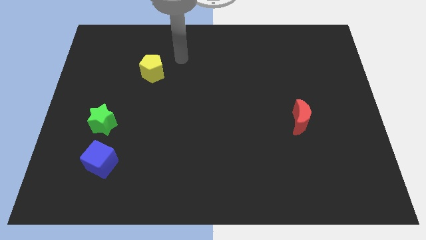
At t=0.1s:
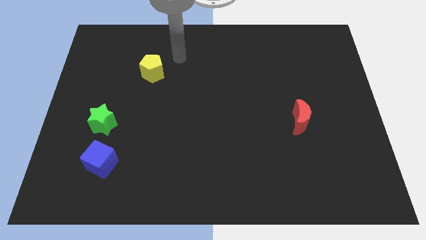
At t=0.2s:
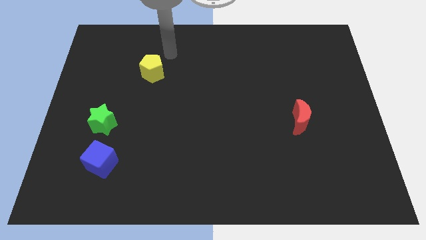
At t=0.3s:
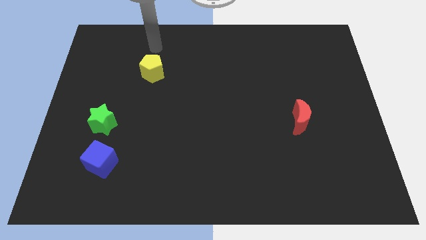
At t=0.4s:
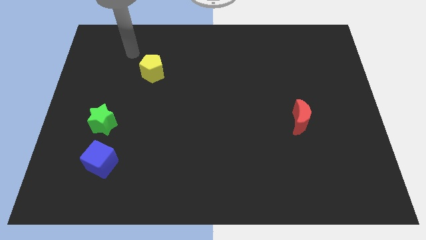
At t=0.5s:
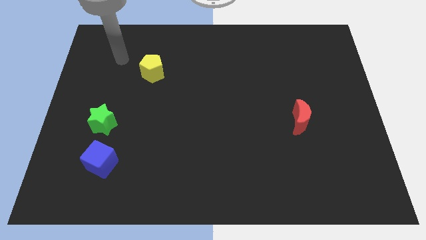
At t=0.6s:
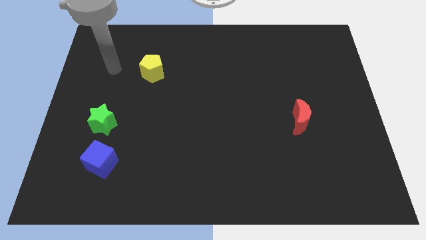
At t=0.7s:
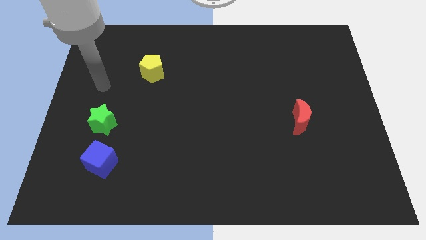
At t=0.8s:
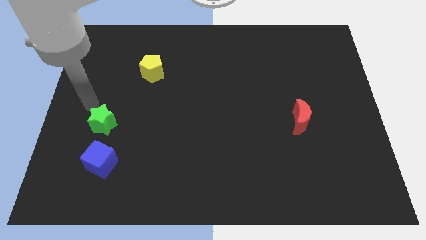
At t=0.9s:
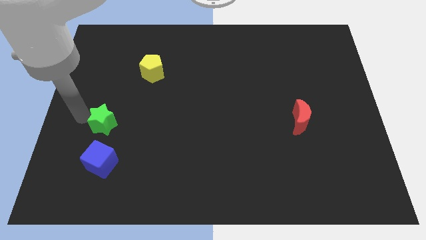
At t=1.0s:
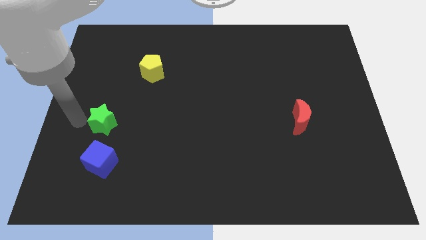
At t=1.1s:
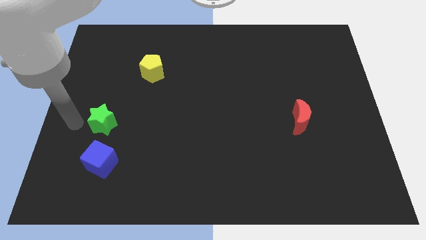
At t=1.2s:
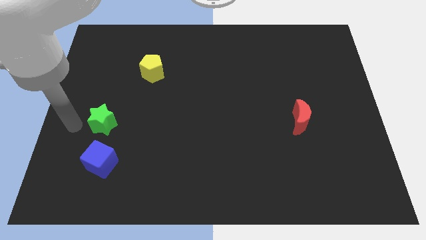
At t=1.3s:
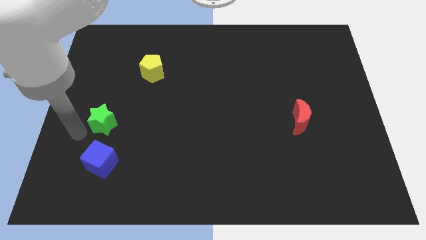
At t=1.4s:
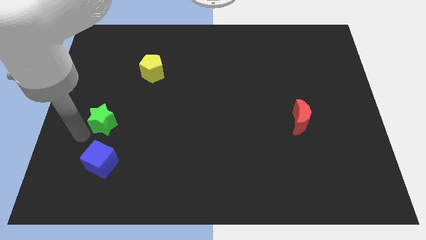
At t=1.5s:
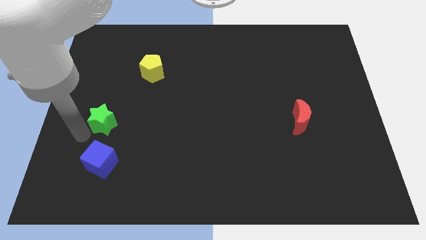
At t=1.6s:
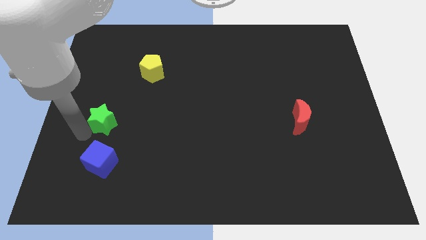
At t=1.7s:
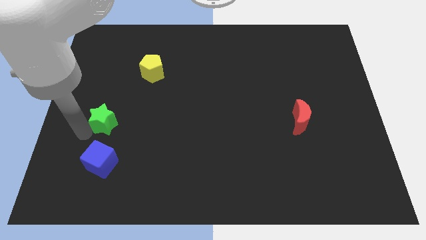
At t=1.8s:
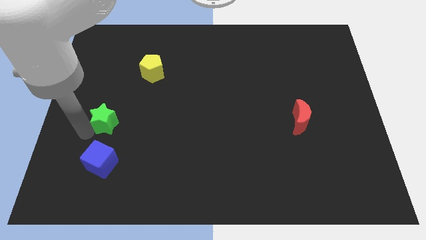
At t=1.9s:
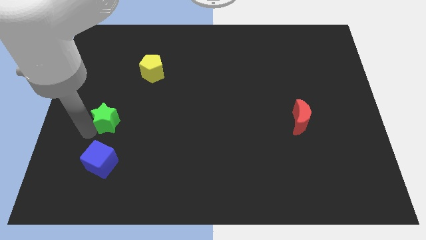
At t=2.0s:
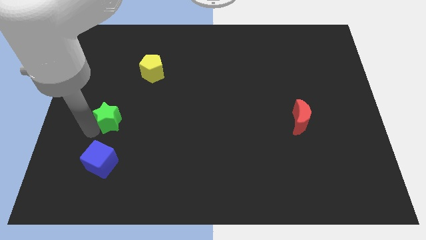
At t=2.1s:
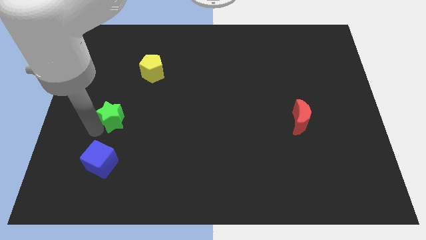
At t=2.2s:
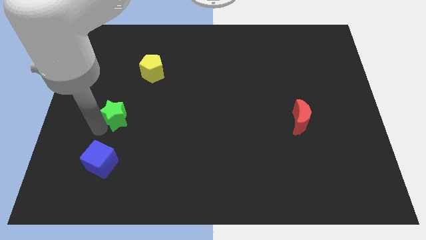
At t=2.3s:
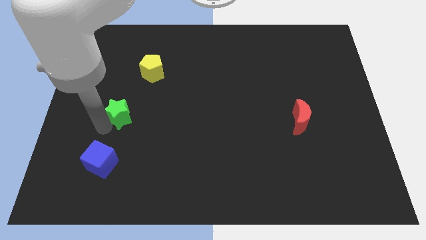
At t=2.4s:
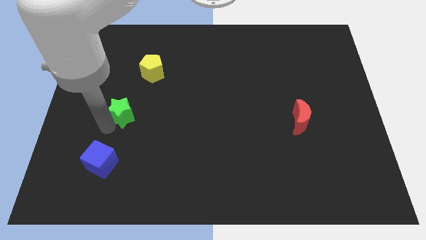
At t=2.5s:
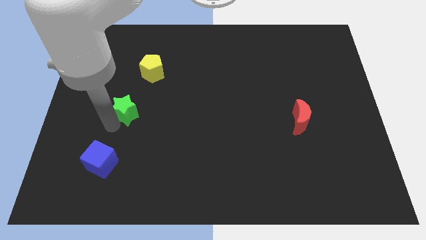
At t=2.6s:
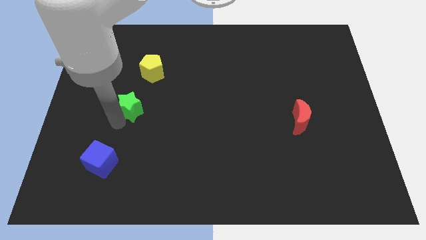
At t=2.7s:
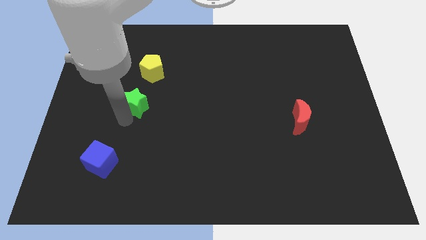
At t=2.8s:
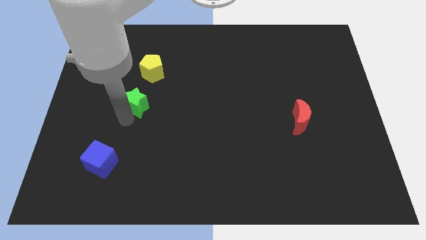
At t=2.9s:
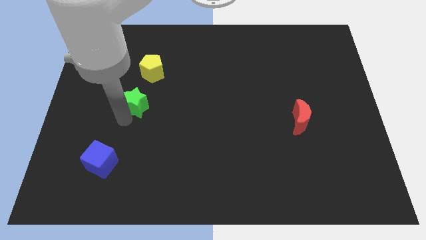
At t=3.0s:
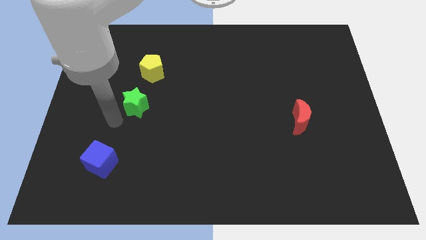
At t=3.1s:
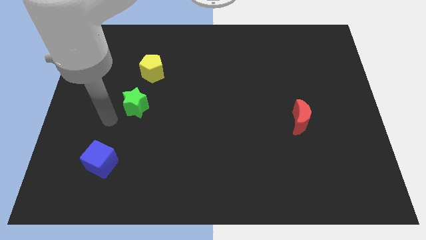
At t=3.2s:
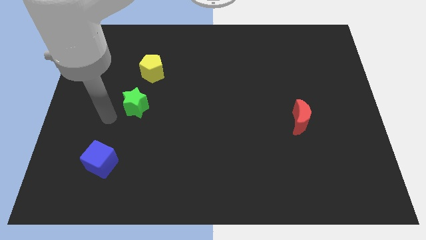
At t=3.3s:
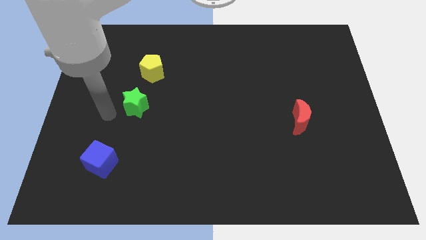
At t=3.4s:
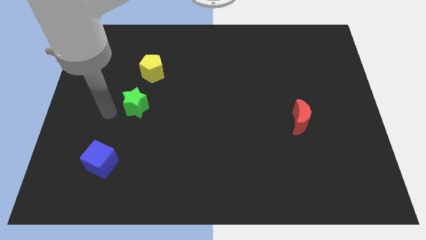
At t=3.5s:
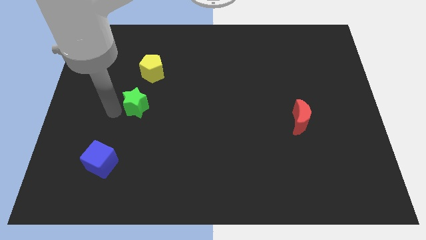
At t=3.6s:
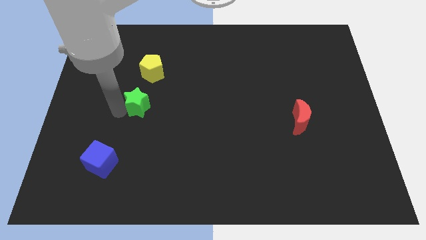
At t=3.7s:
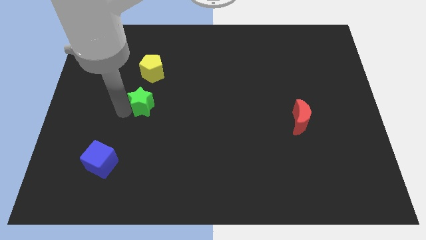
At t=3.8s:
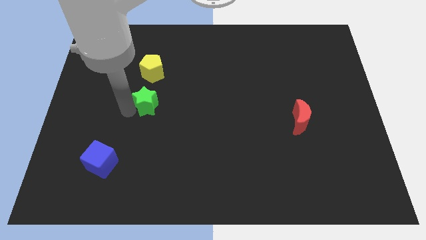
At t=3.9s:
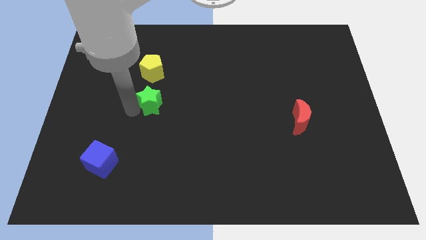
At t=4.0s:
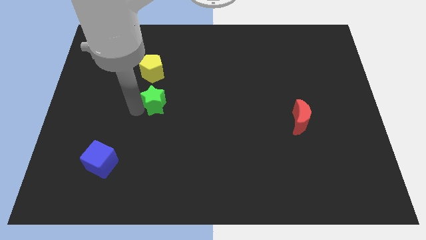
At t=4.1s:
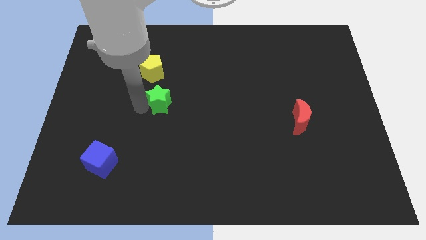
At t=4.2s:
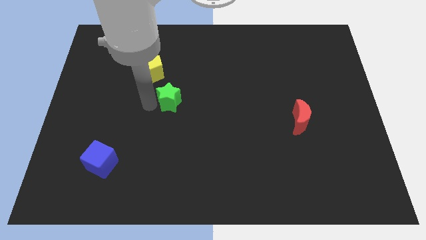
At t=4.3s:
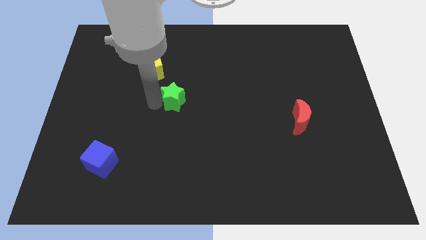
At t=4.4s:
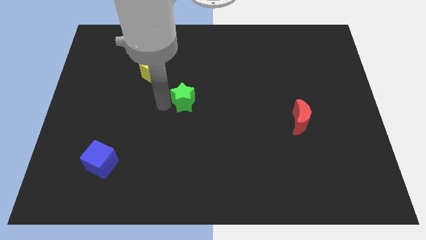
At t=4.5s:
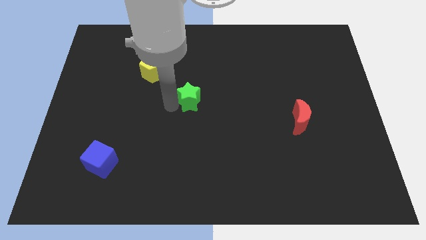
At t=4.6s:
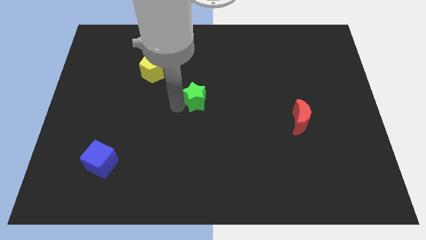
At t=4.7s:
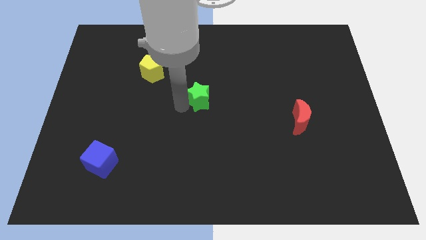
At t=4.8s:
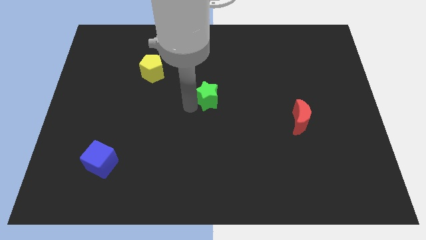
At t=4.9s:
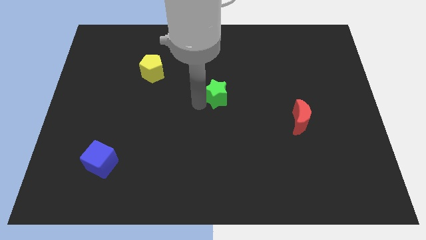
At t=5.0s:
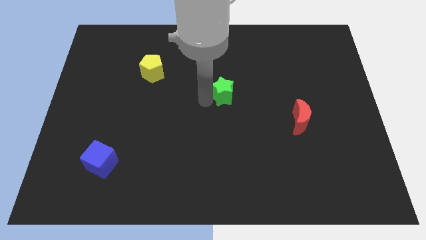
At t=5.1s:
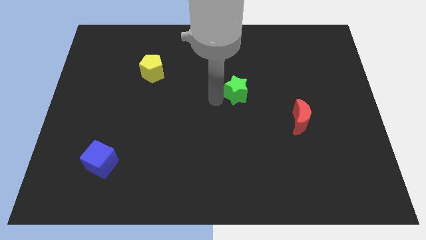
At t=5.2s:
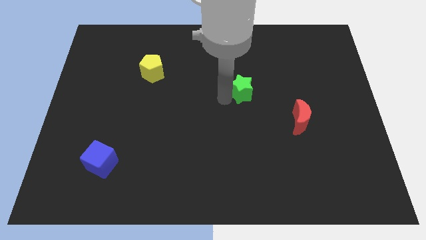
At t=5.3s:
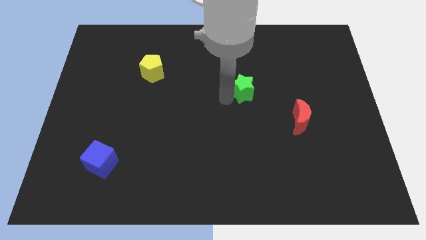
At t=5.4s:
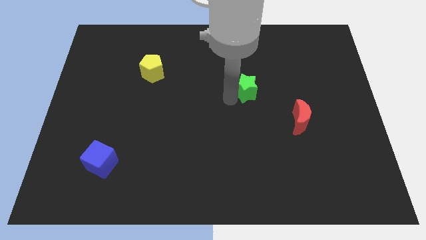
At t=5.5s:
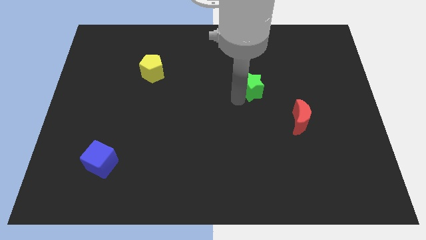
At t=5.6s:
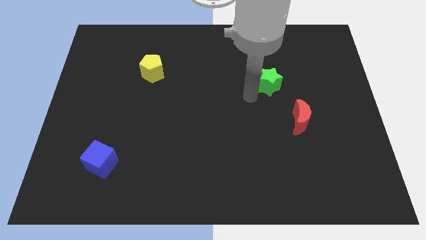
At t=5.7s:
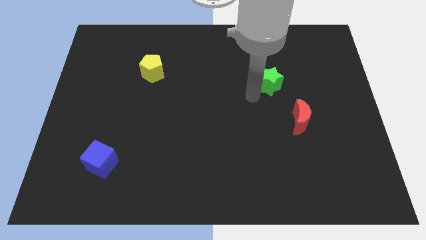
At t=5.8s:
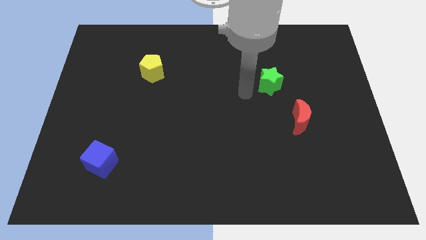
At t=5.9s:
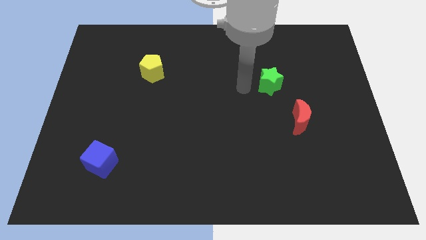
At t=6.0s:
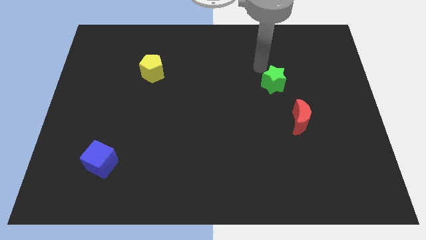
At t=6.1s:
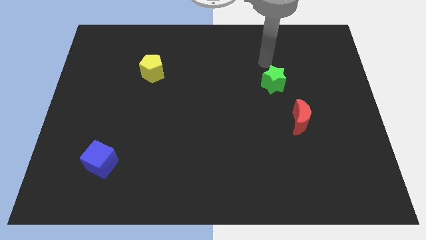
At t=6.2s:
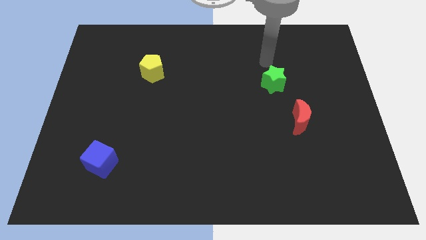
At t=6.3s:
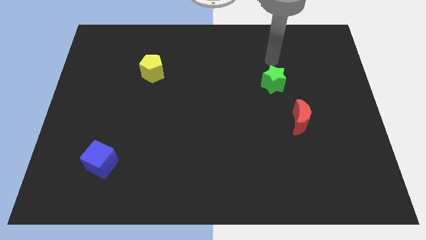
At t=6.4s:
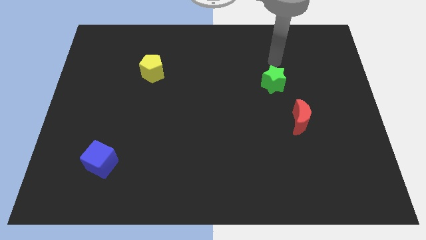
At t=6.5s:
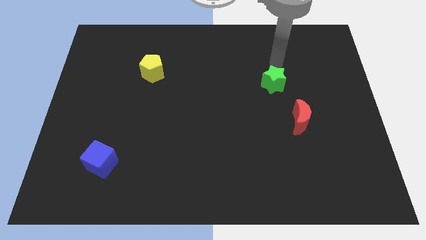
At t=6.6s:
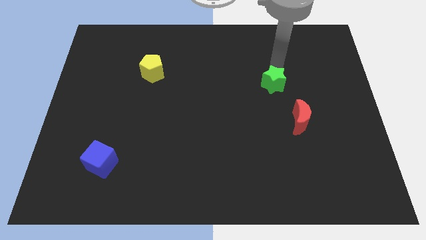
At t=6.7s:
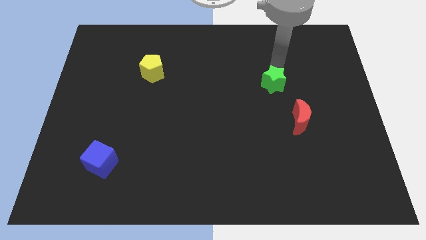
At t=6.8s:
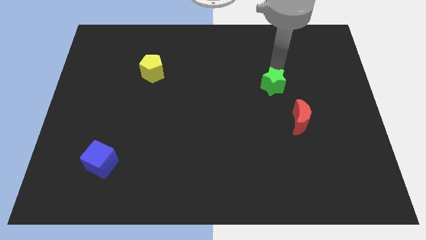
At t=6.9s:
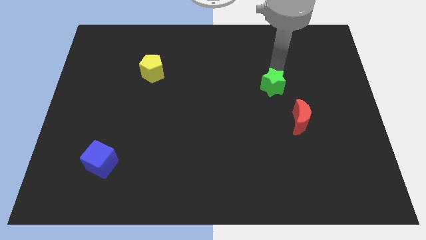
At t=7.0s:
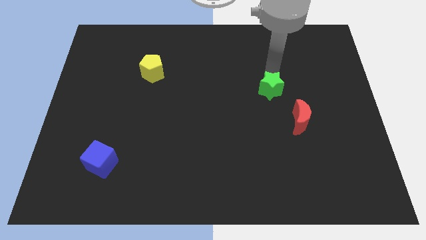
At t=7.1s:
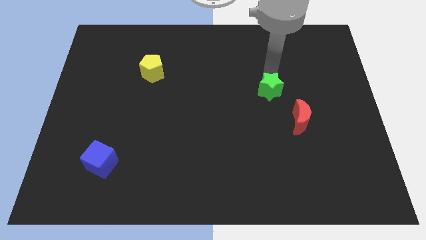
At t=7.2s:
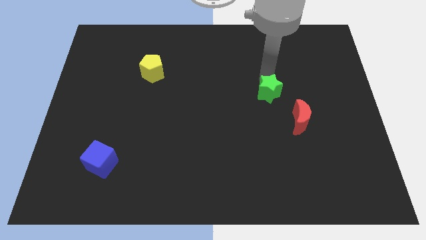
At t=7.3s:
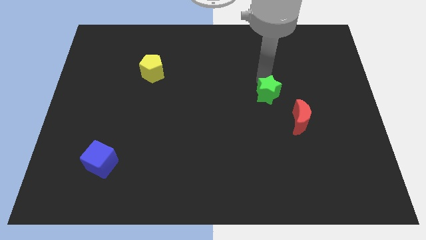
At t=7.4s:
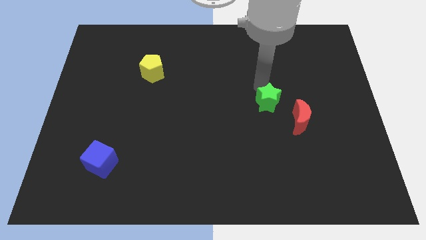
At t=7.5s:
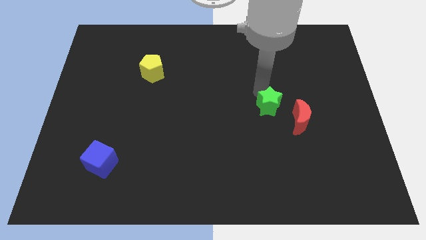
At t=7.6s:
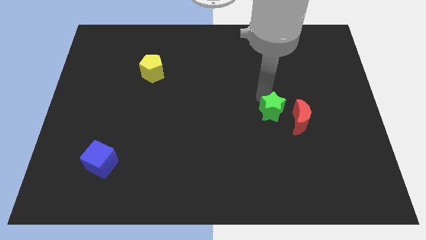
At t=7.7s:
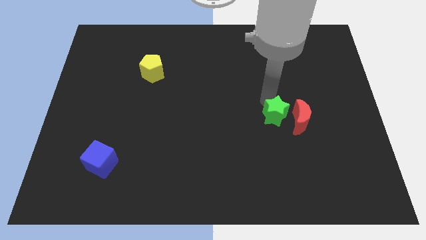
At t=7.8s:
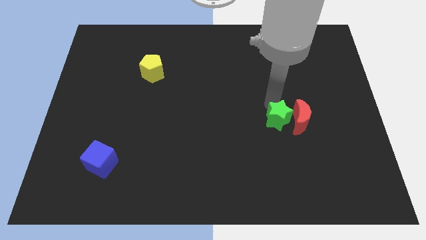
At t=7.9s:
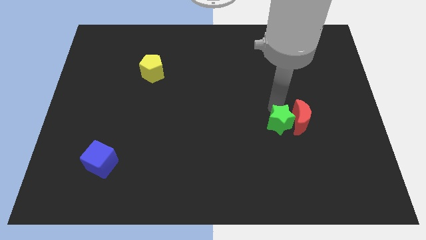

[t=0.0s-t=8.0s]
move the green star to the red moon
